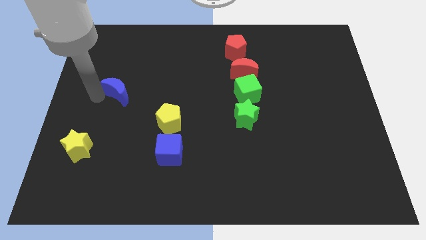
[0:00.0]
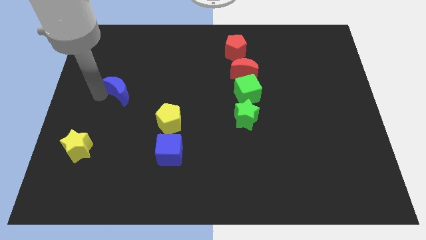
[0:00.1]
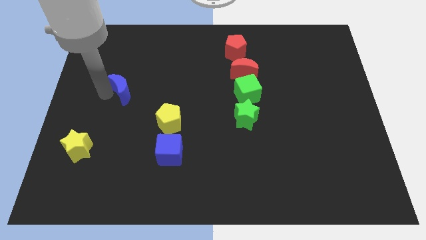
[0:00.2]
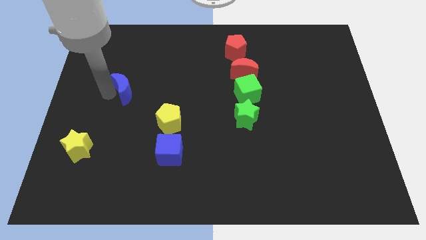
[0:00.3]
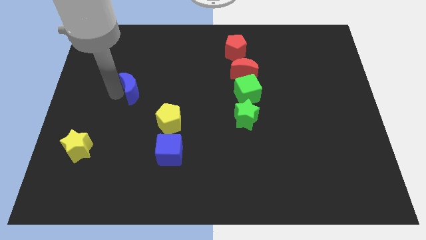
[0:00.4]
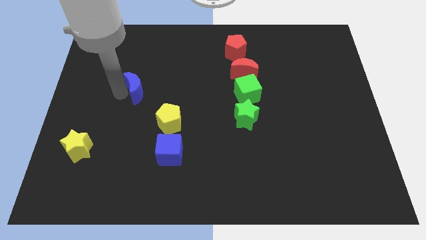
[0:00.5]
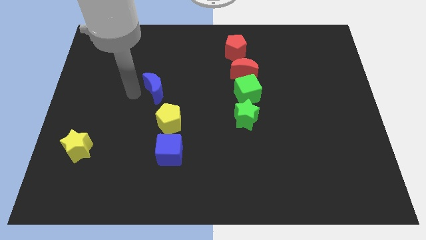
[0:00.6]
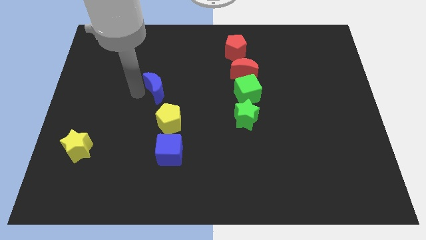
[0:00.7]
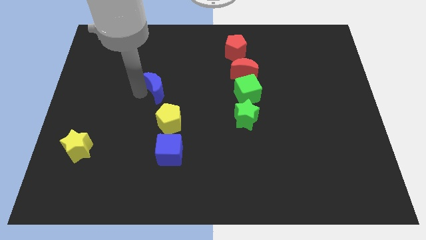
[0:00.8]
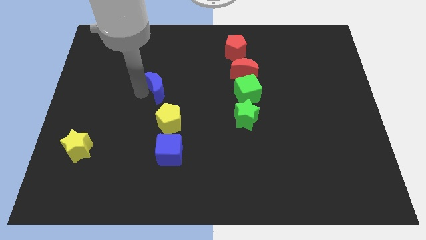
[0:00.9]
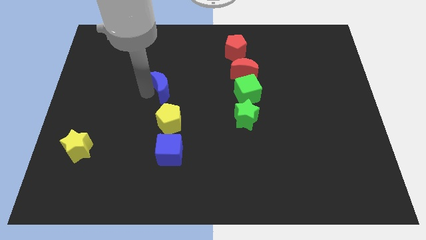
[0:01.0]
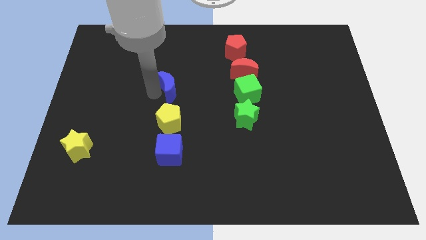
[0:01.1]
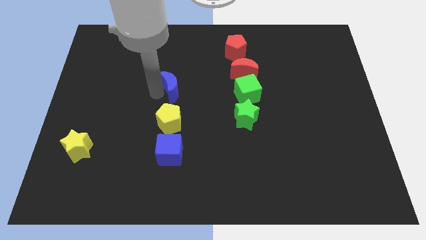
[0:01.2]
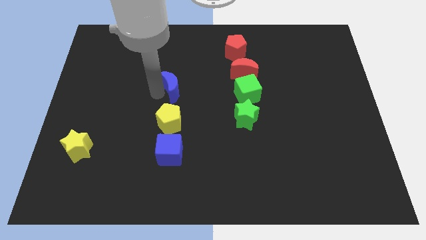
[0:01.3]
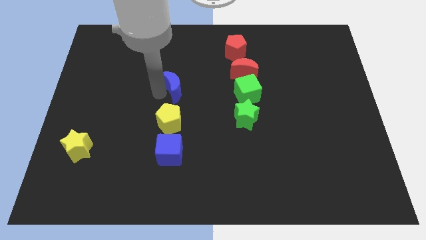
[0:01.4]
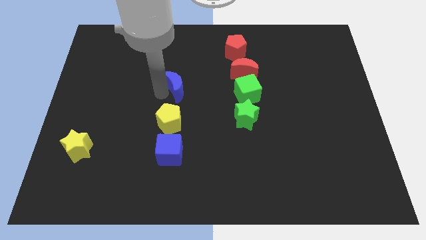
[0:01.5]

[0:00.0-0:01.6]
place the blue crescent above the yellow pentagon

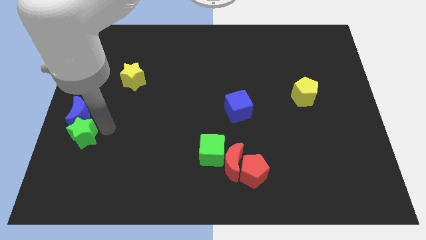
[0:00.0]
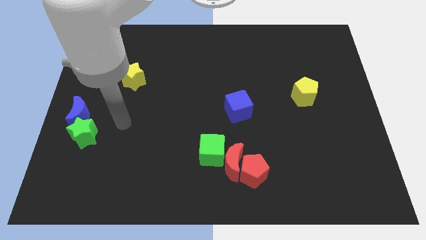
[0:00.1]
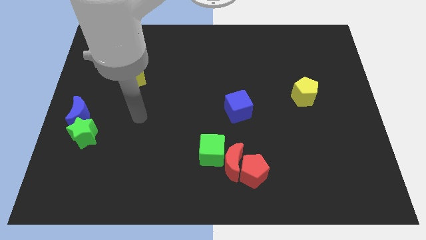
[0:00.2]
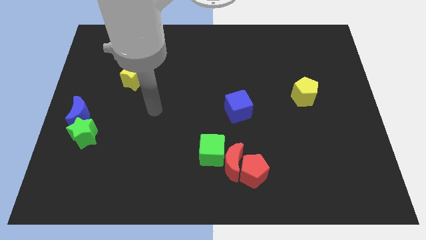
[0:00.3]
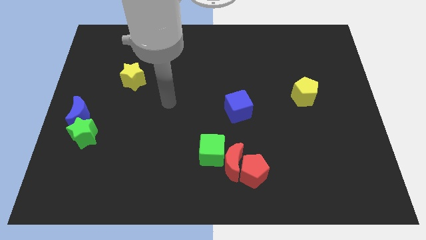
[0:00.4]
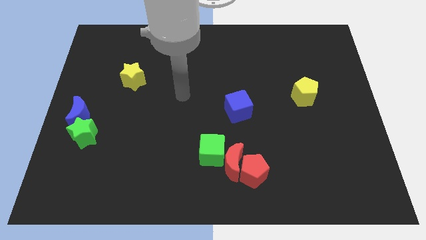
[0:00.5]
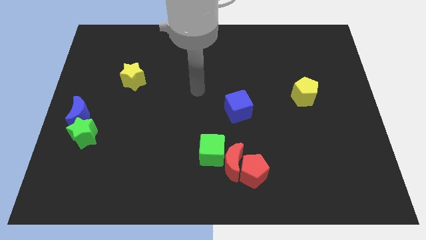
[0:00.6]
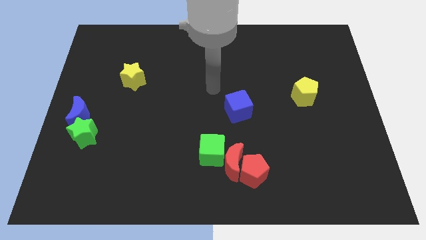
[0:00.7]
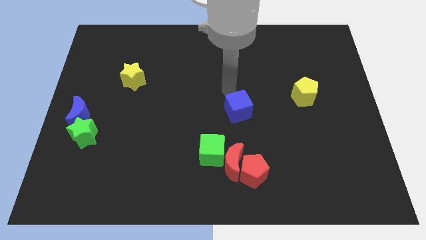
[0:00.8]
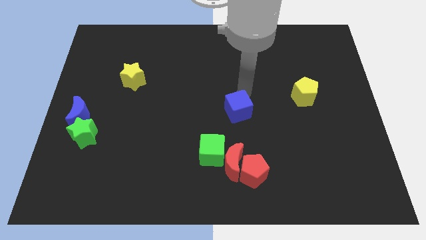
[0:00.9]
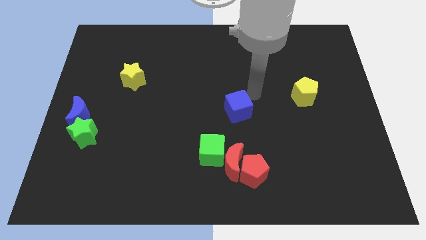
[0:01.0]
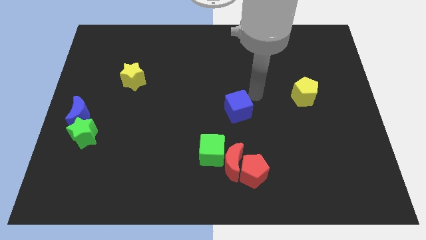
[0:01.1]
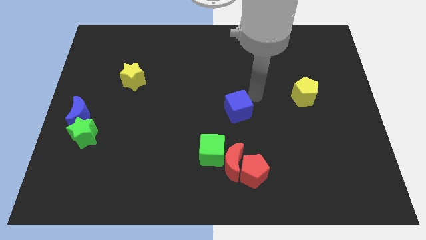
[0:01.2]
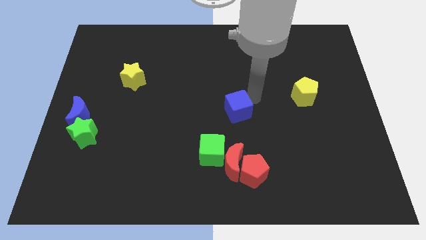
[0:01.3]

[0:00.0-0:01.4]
place the arm close to the blue cube

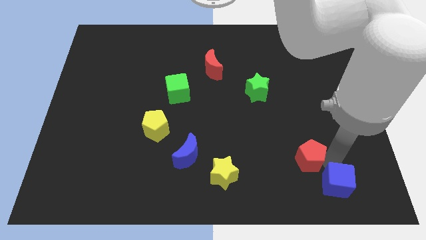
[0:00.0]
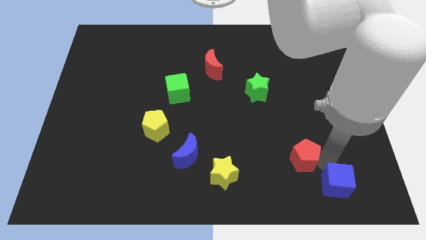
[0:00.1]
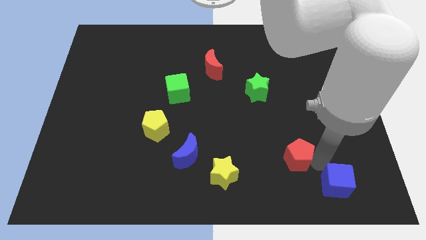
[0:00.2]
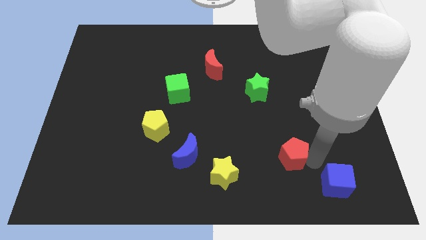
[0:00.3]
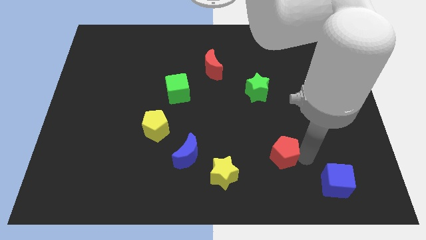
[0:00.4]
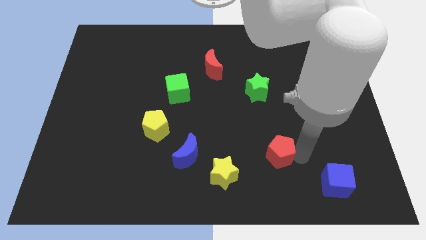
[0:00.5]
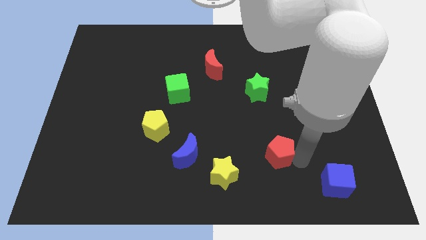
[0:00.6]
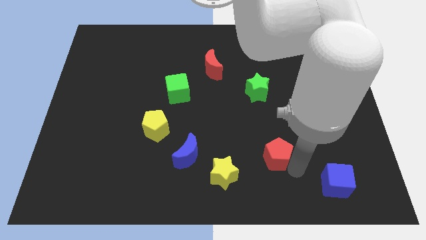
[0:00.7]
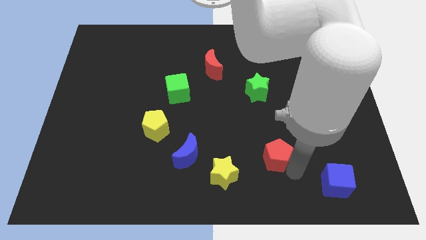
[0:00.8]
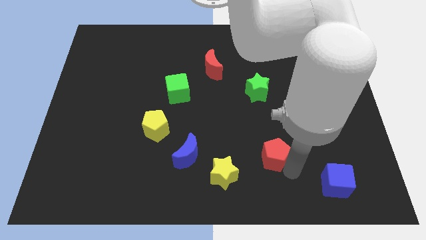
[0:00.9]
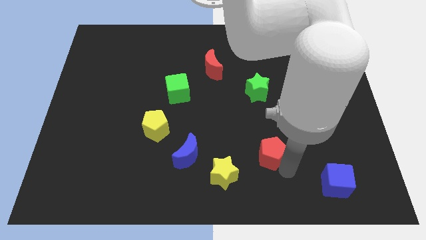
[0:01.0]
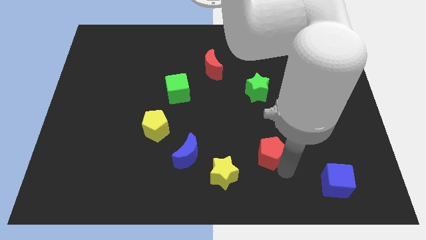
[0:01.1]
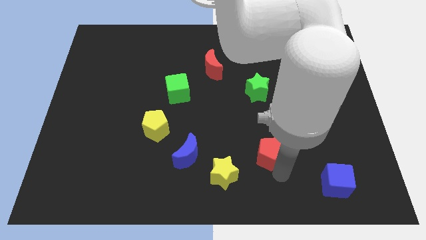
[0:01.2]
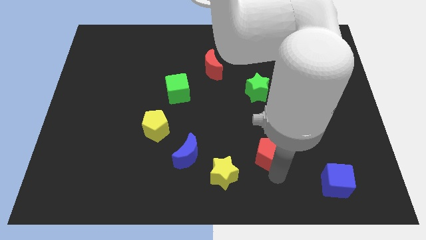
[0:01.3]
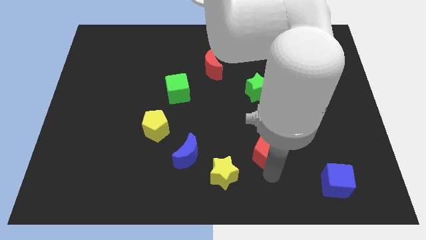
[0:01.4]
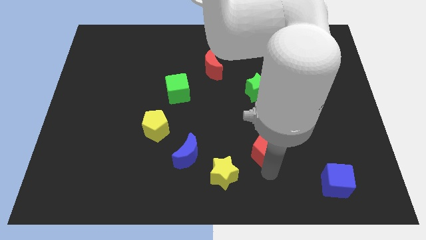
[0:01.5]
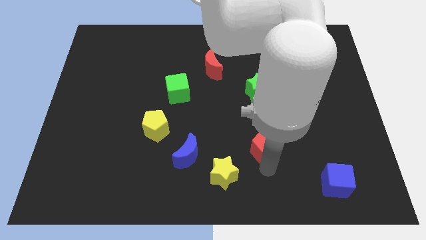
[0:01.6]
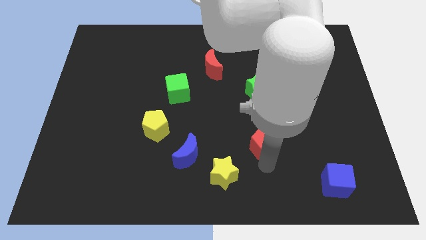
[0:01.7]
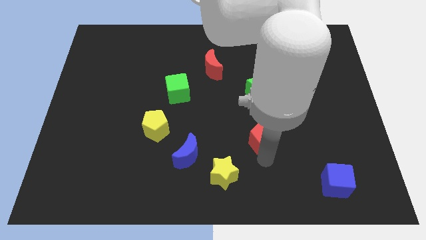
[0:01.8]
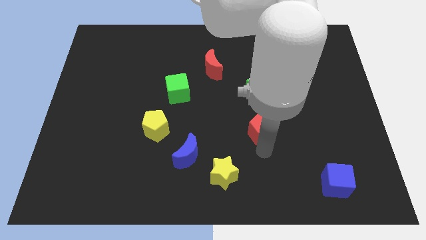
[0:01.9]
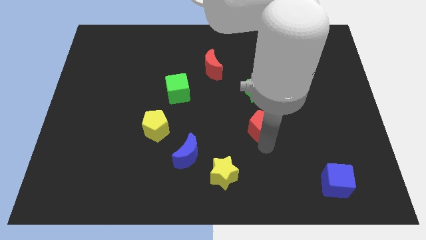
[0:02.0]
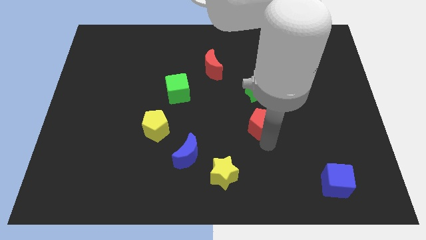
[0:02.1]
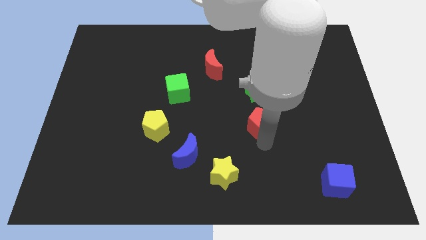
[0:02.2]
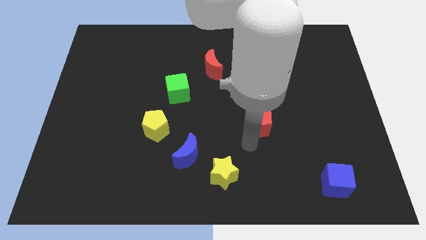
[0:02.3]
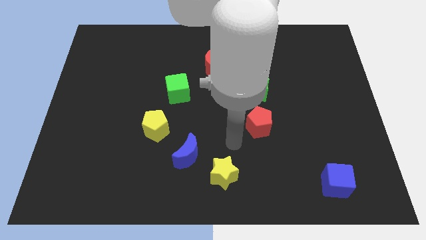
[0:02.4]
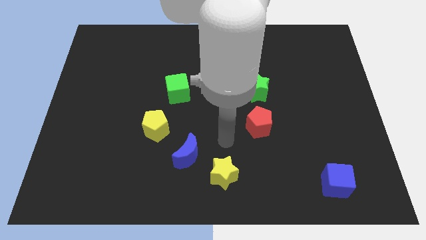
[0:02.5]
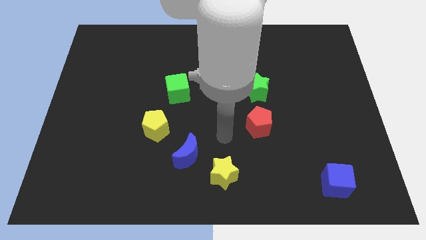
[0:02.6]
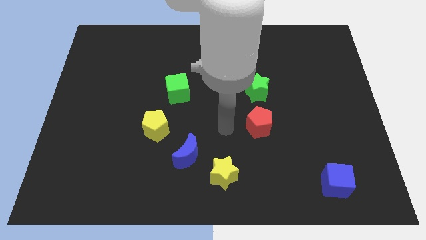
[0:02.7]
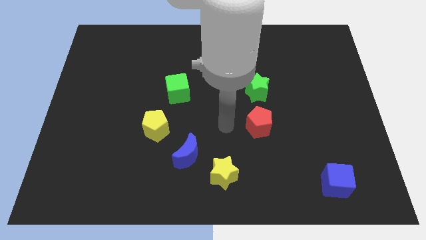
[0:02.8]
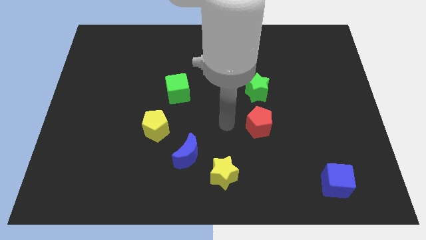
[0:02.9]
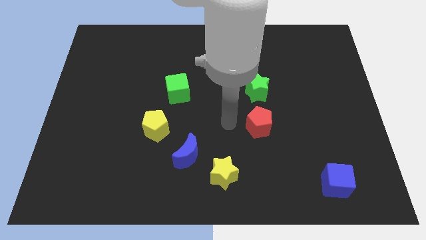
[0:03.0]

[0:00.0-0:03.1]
put the red pentagon underneath the green star

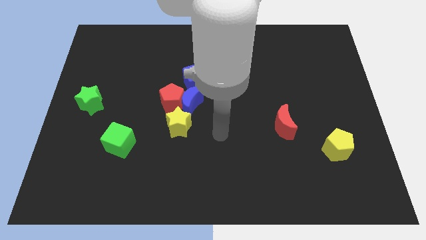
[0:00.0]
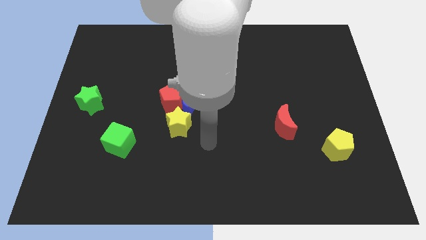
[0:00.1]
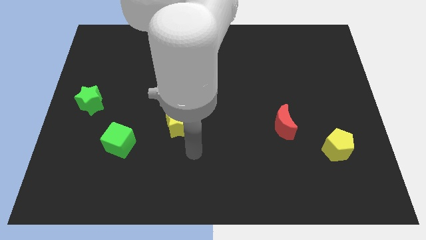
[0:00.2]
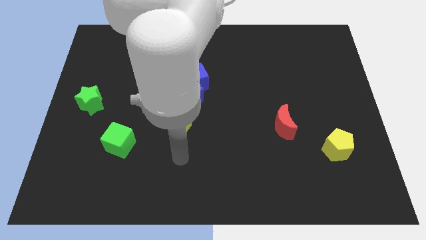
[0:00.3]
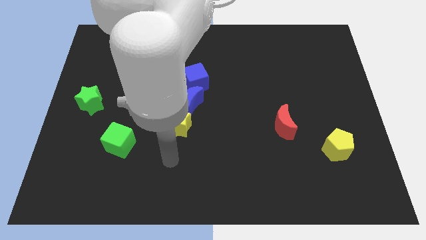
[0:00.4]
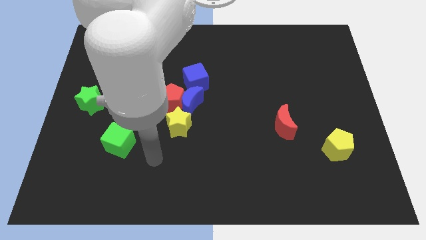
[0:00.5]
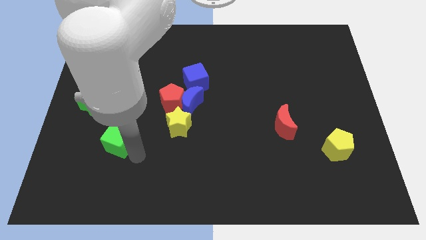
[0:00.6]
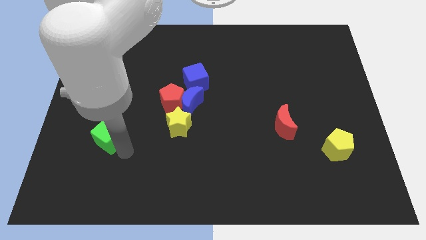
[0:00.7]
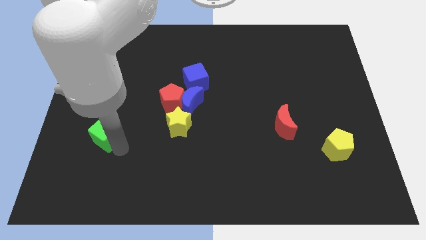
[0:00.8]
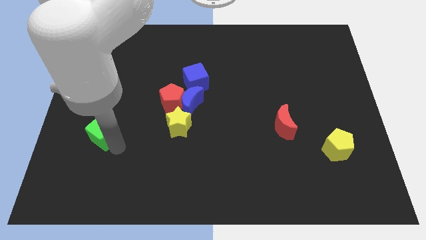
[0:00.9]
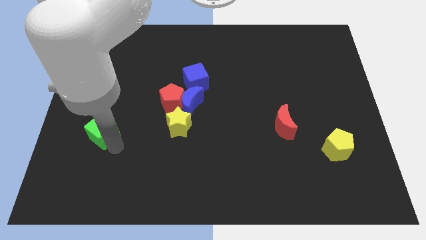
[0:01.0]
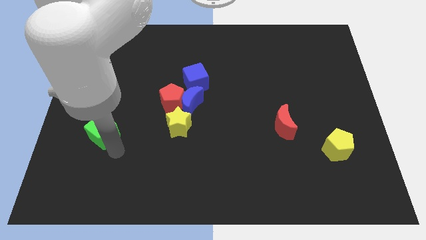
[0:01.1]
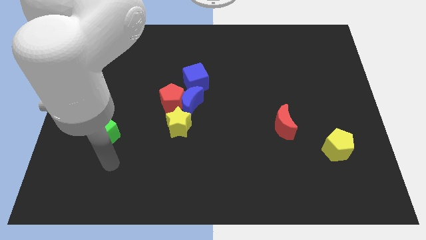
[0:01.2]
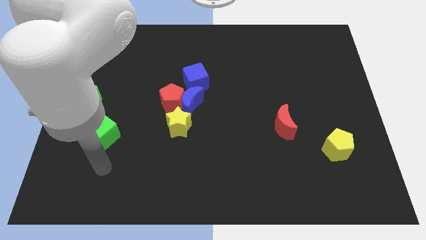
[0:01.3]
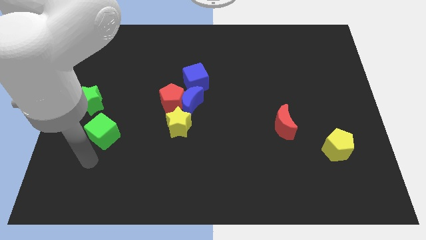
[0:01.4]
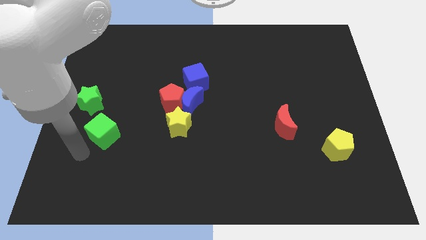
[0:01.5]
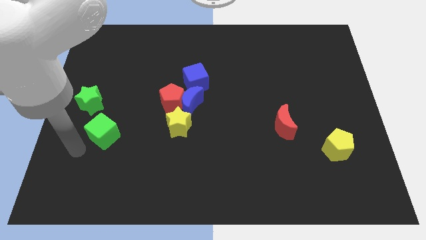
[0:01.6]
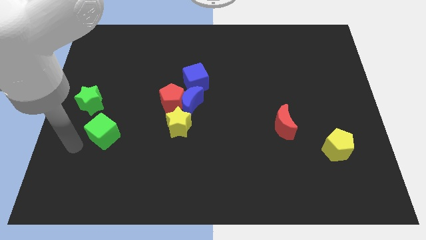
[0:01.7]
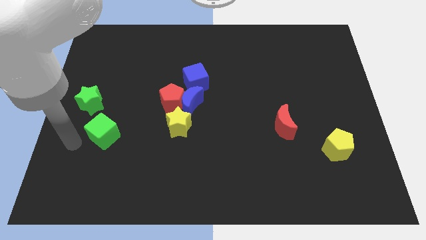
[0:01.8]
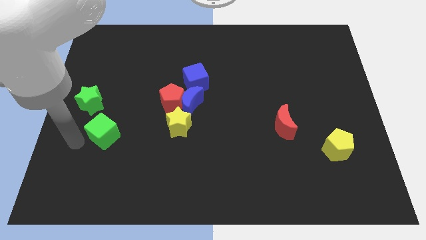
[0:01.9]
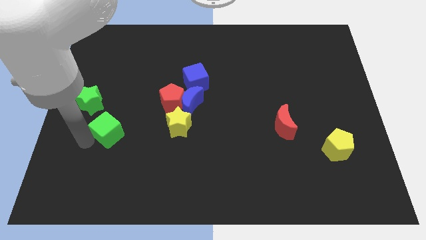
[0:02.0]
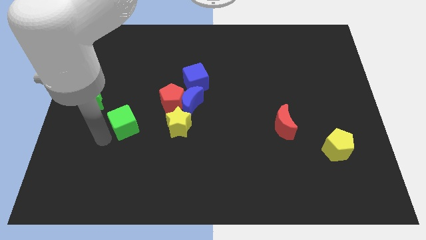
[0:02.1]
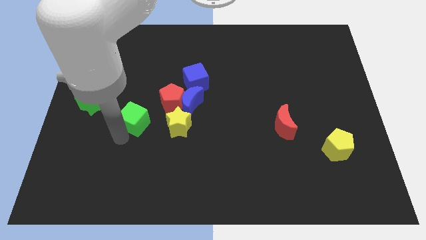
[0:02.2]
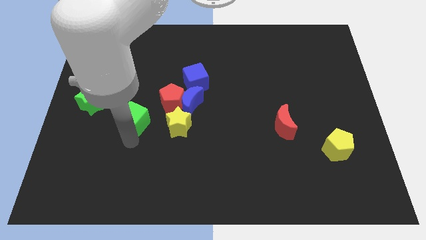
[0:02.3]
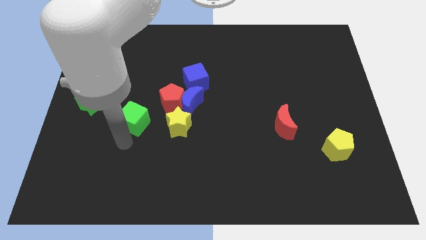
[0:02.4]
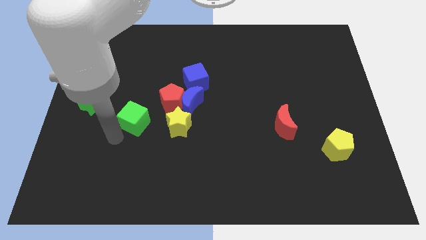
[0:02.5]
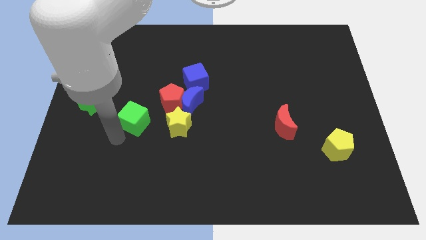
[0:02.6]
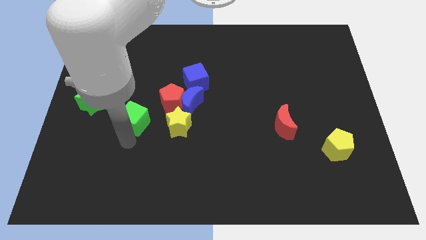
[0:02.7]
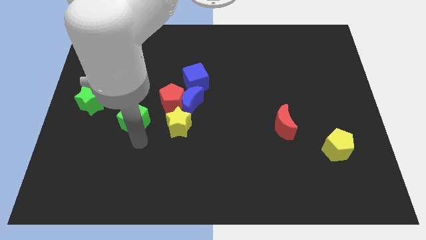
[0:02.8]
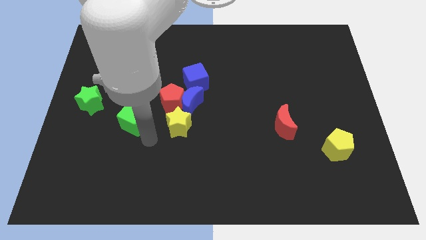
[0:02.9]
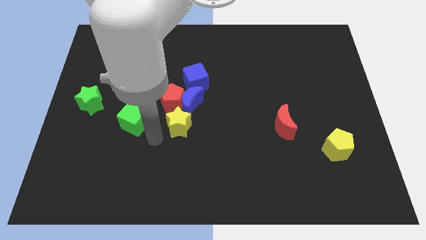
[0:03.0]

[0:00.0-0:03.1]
push the green cube to the left of the yellow star
